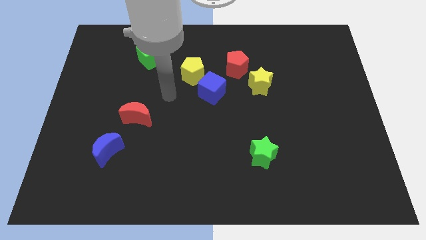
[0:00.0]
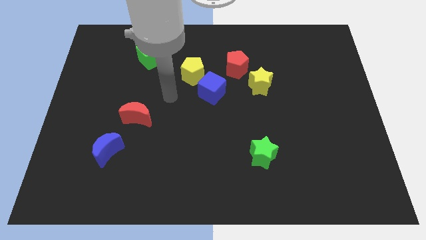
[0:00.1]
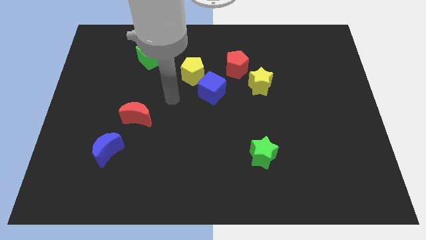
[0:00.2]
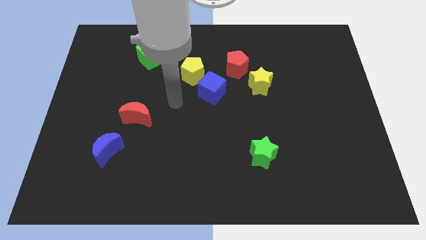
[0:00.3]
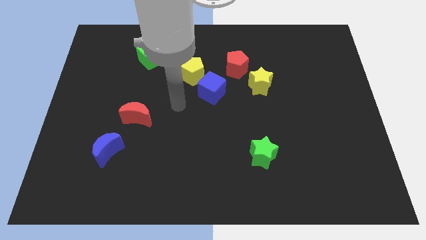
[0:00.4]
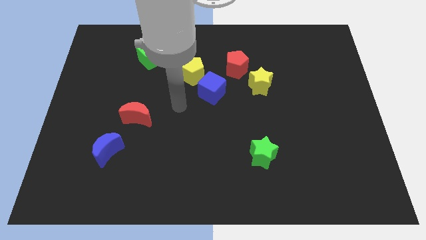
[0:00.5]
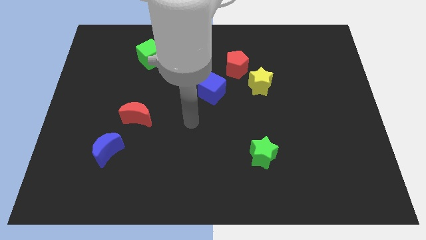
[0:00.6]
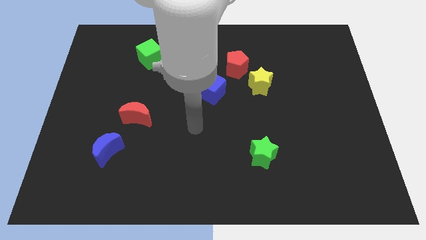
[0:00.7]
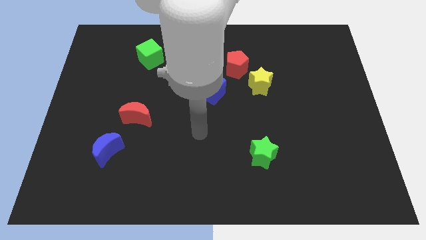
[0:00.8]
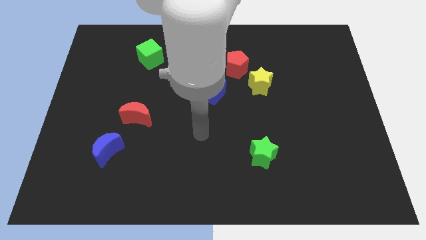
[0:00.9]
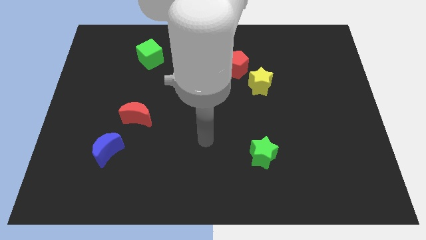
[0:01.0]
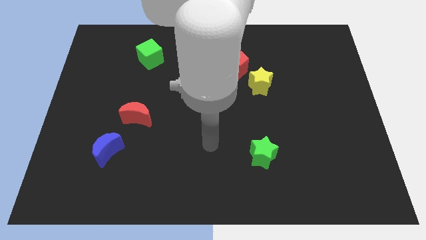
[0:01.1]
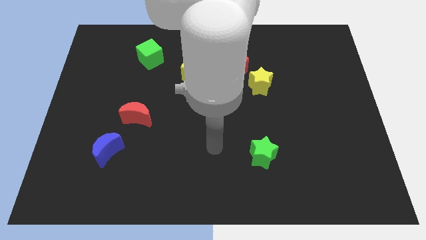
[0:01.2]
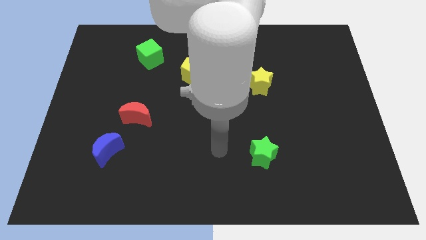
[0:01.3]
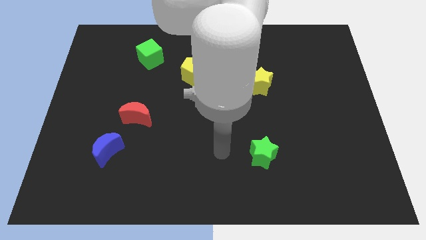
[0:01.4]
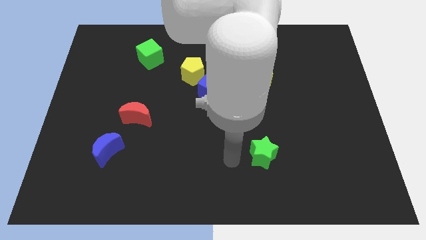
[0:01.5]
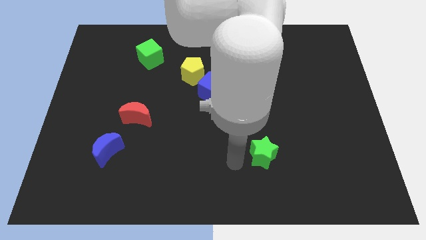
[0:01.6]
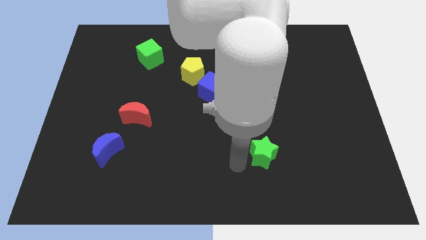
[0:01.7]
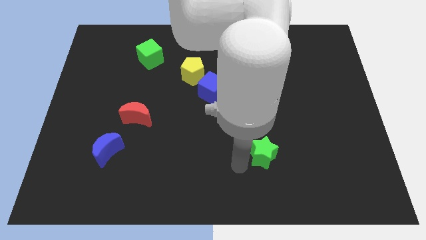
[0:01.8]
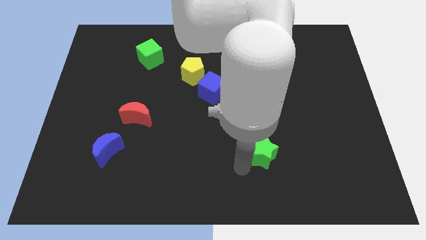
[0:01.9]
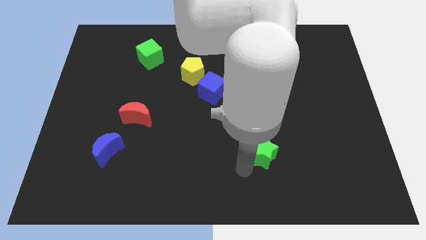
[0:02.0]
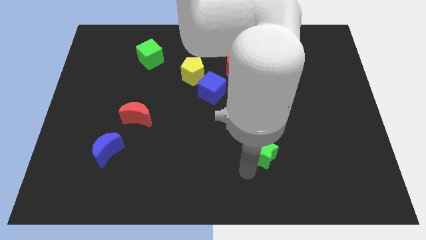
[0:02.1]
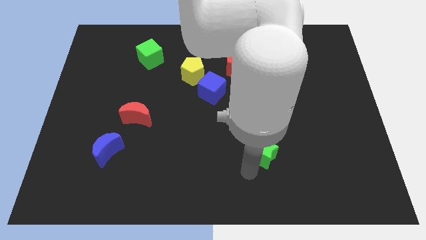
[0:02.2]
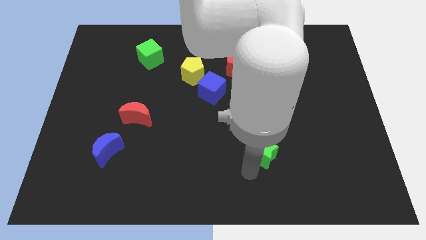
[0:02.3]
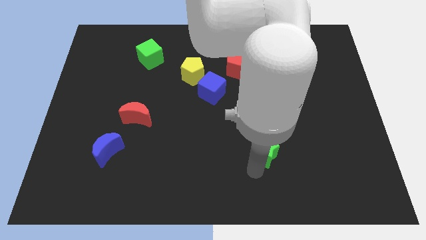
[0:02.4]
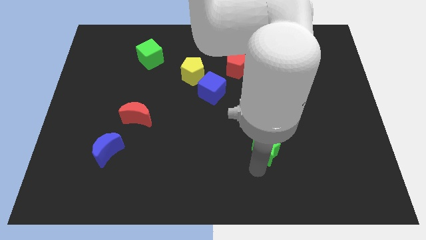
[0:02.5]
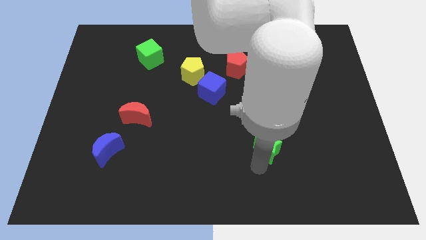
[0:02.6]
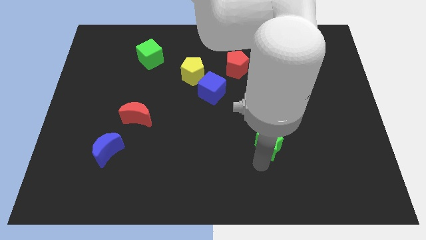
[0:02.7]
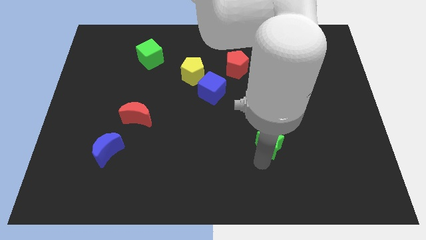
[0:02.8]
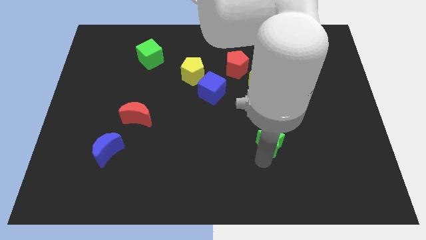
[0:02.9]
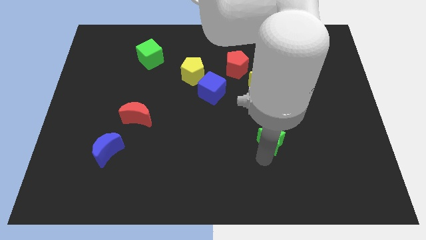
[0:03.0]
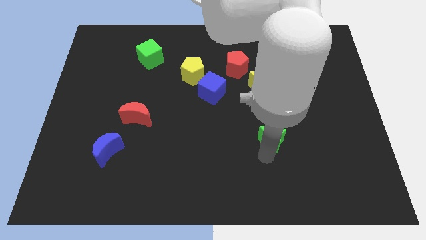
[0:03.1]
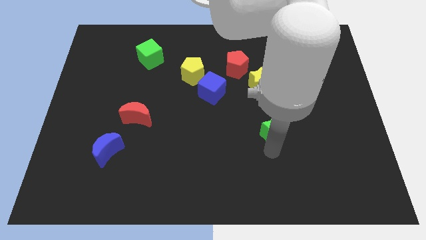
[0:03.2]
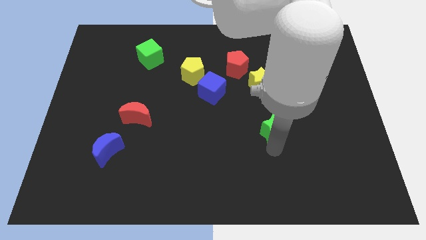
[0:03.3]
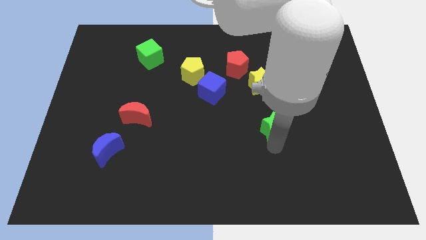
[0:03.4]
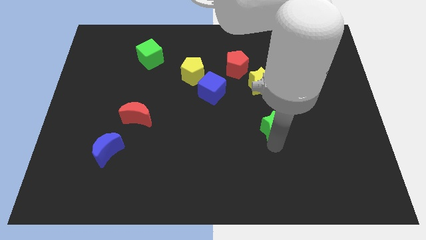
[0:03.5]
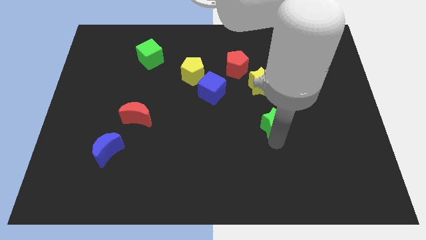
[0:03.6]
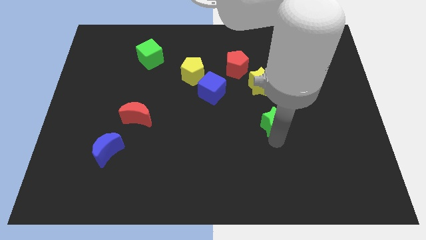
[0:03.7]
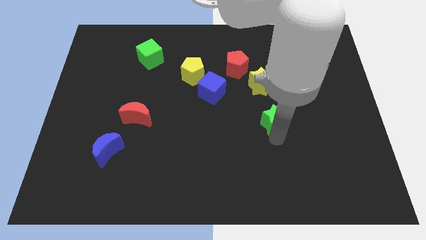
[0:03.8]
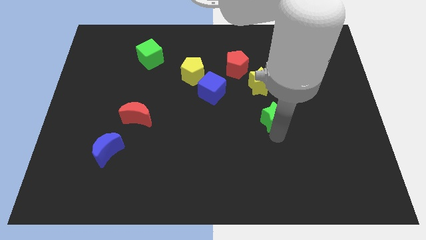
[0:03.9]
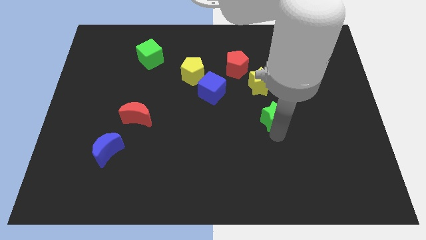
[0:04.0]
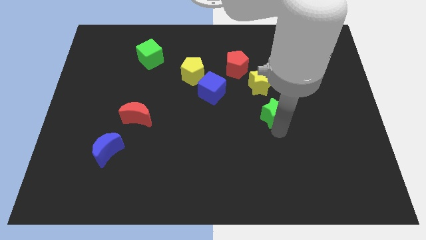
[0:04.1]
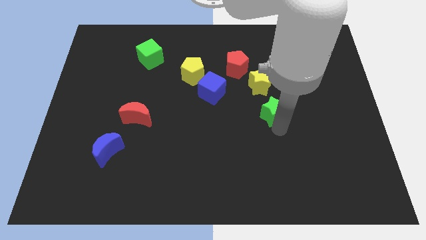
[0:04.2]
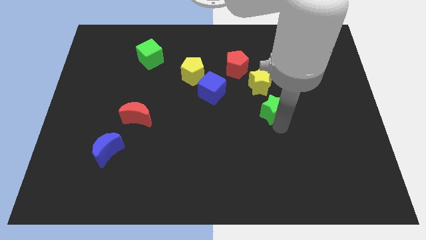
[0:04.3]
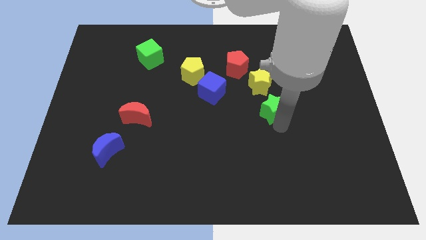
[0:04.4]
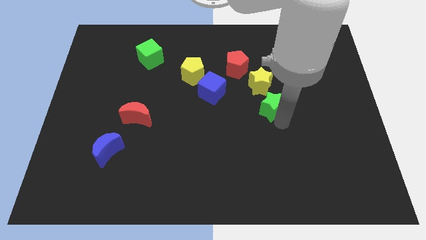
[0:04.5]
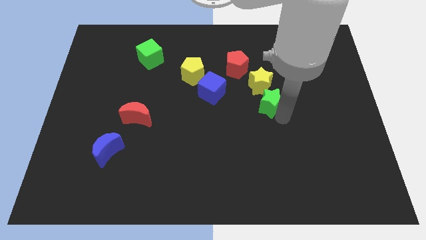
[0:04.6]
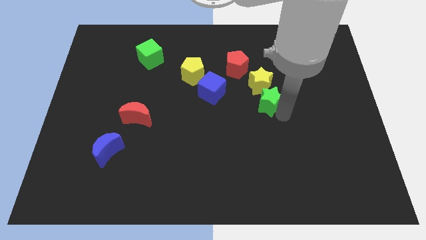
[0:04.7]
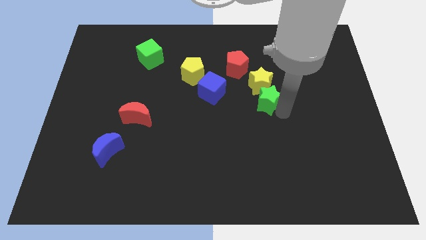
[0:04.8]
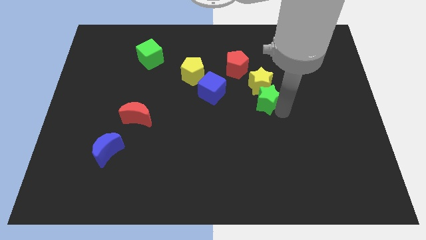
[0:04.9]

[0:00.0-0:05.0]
push the green star to the yellow star

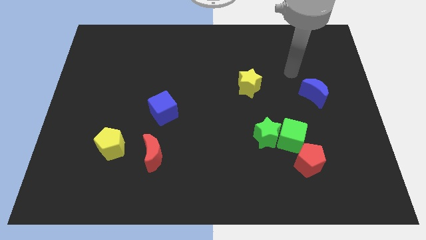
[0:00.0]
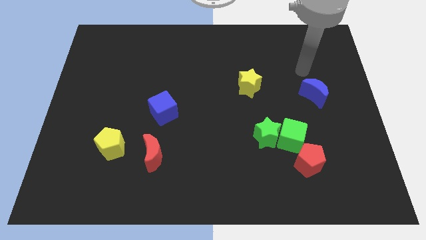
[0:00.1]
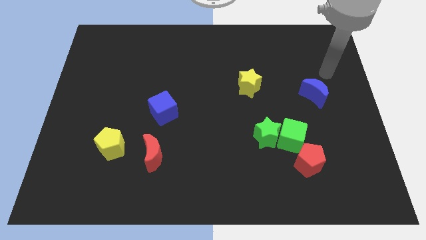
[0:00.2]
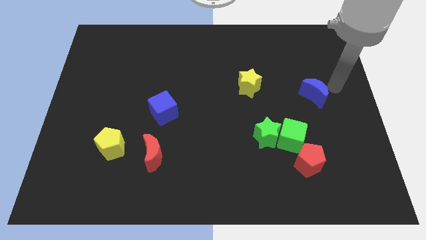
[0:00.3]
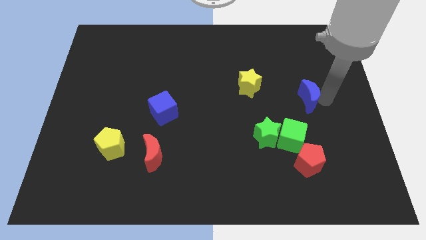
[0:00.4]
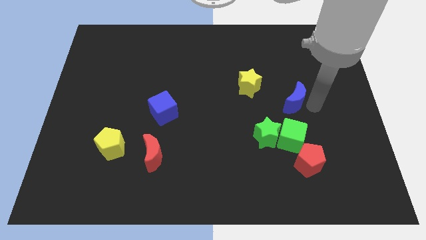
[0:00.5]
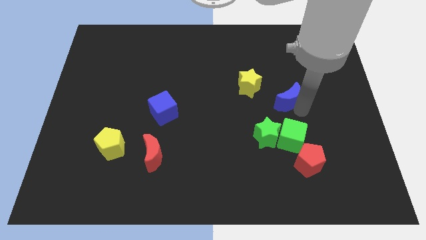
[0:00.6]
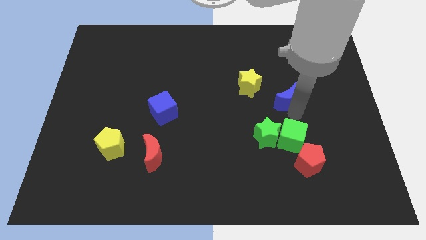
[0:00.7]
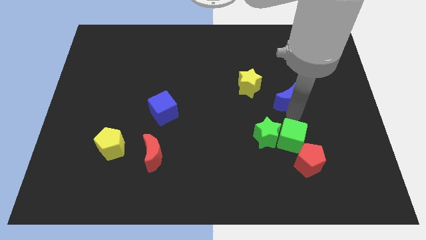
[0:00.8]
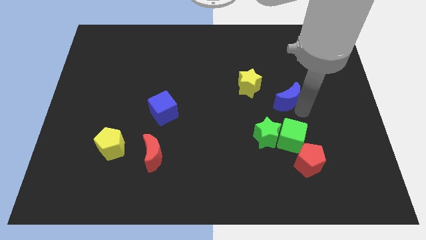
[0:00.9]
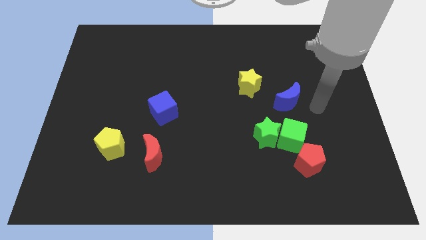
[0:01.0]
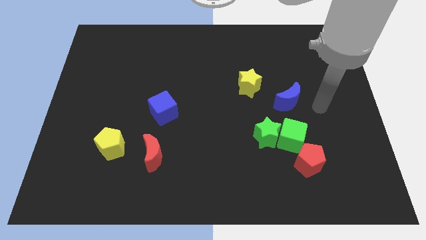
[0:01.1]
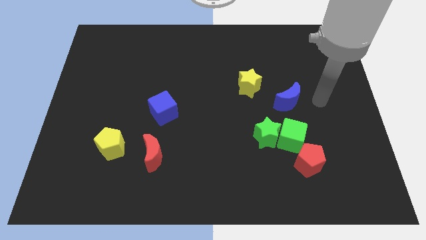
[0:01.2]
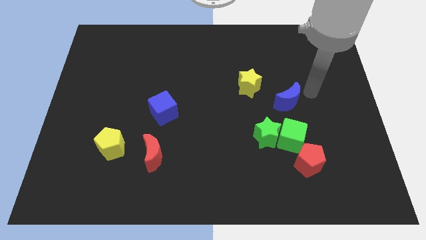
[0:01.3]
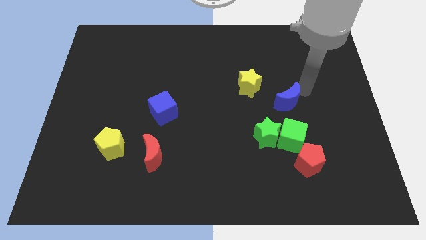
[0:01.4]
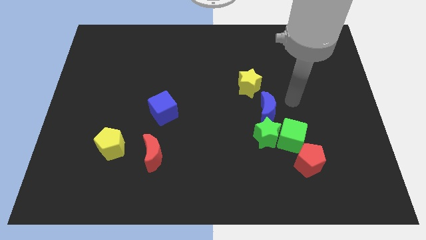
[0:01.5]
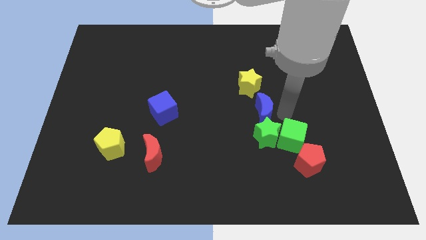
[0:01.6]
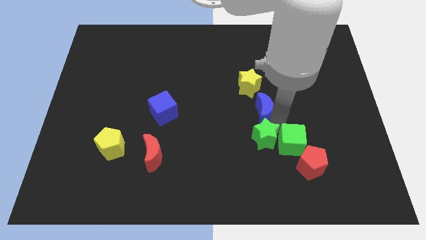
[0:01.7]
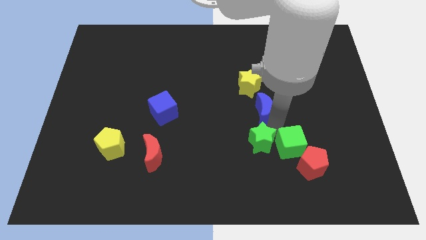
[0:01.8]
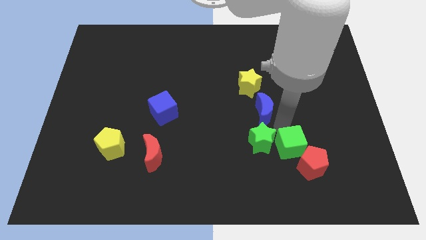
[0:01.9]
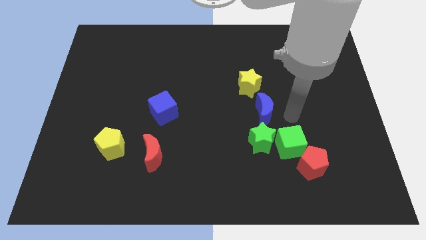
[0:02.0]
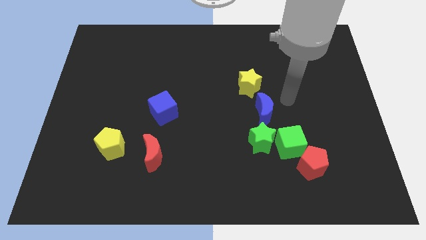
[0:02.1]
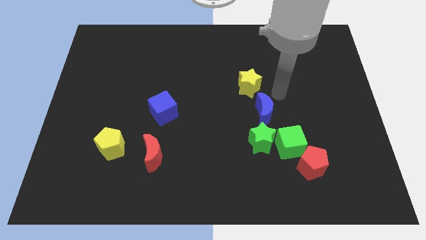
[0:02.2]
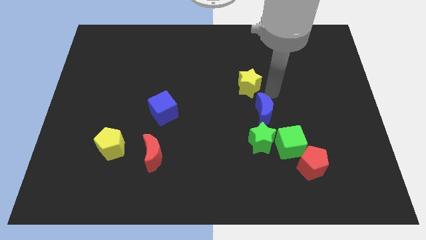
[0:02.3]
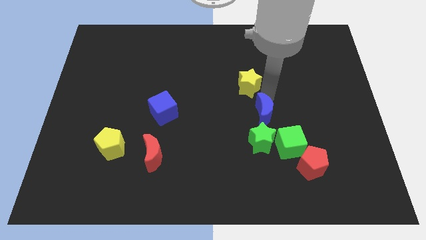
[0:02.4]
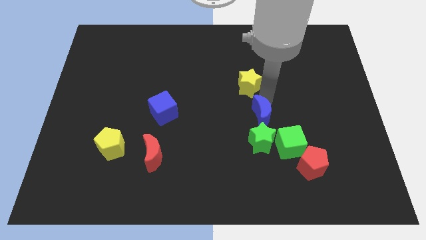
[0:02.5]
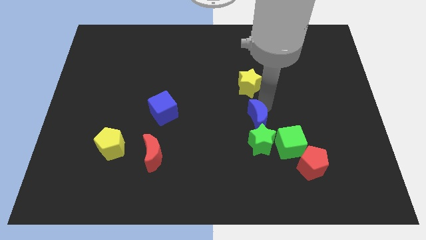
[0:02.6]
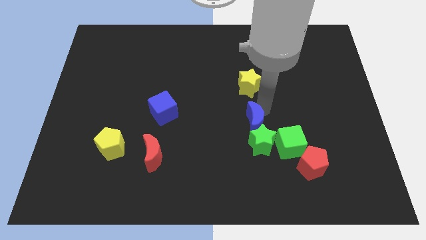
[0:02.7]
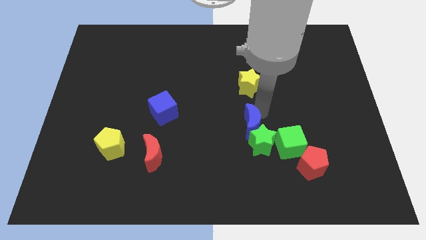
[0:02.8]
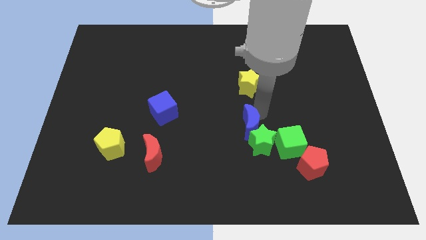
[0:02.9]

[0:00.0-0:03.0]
push the blue moon to the green star

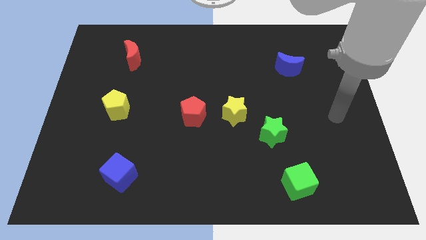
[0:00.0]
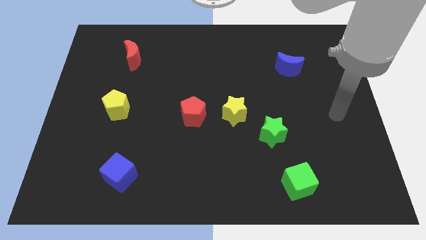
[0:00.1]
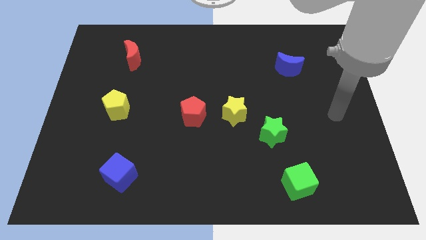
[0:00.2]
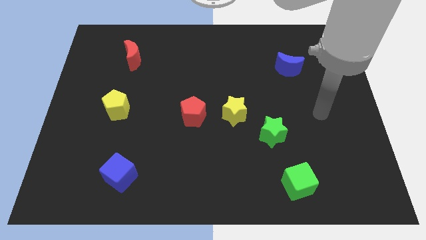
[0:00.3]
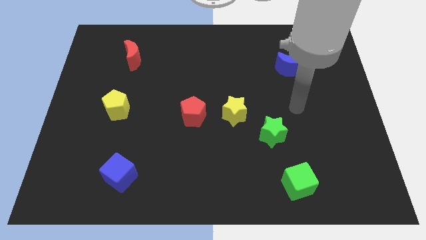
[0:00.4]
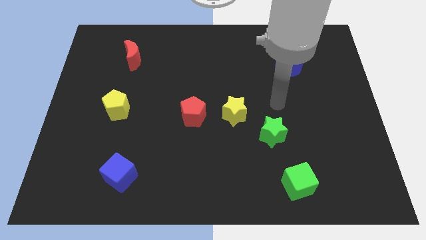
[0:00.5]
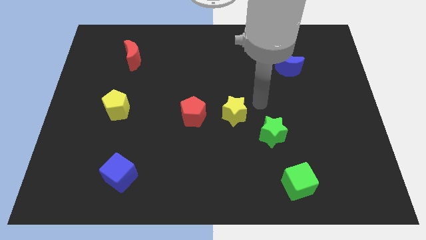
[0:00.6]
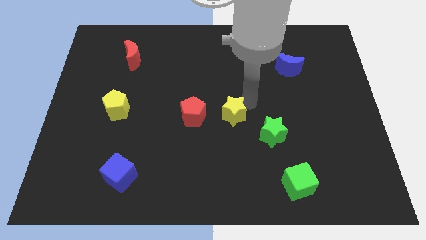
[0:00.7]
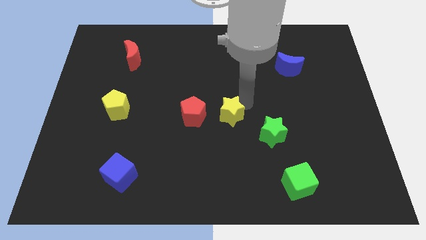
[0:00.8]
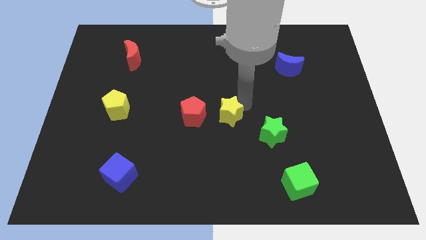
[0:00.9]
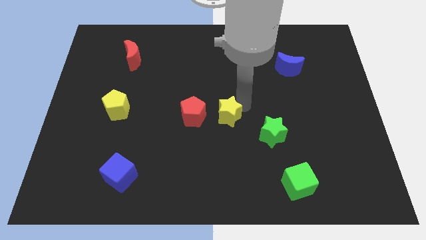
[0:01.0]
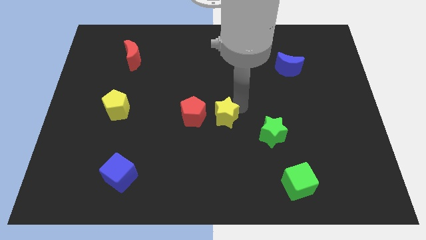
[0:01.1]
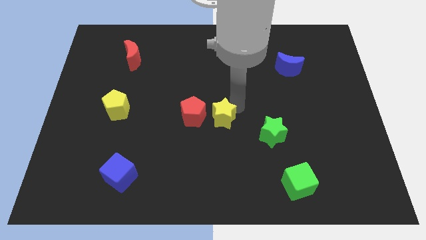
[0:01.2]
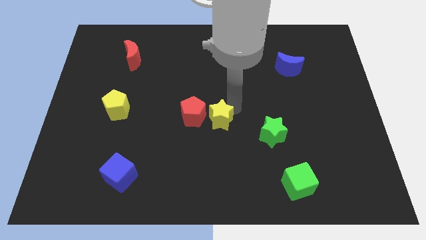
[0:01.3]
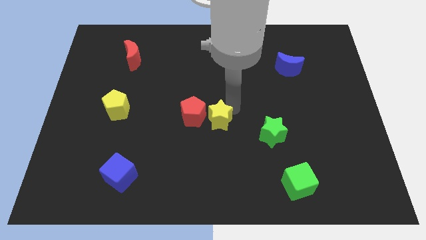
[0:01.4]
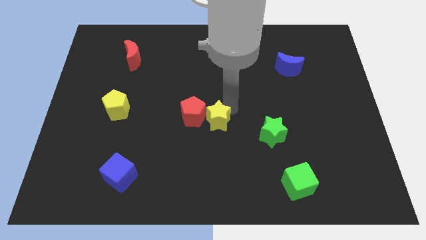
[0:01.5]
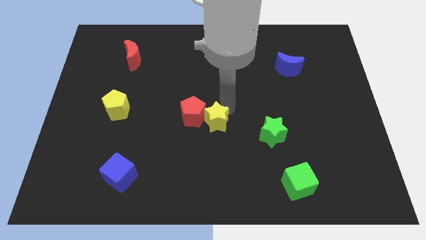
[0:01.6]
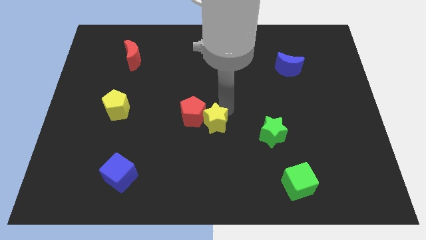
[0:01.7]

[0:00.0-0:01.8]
move the yellow star towards the red pentagon
